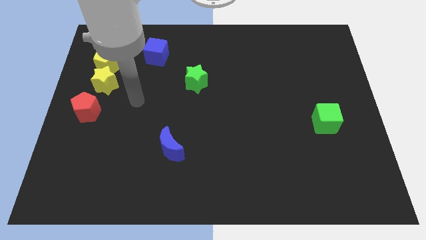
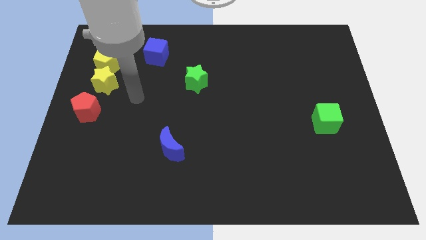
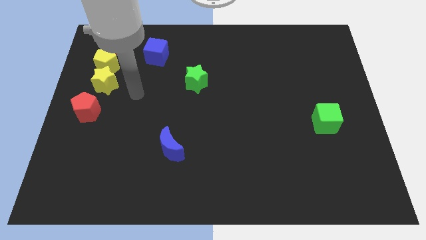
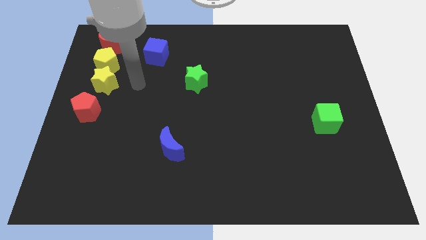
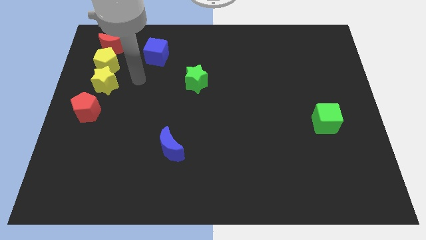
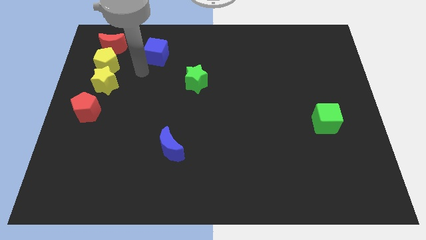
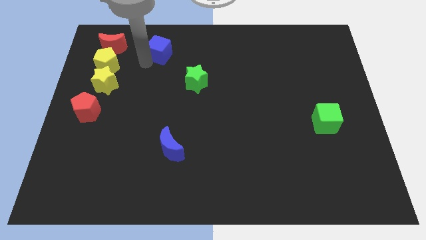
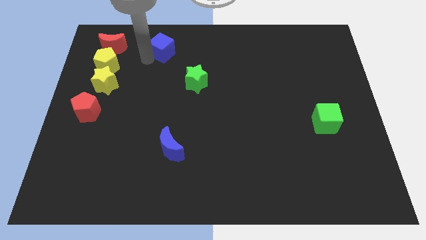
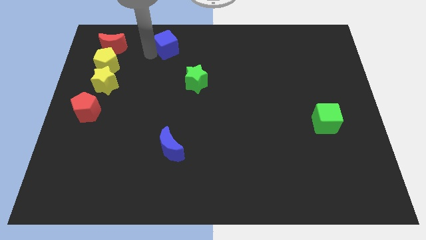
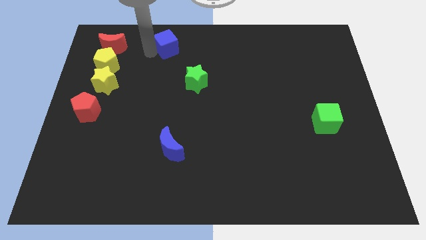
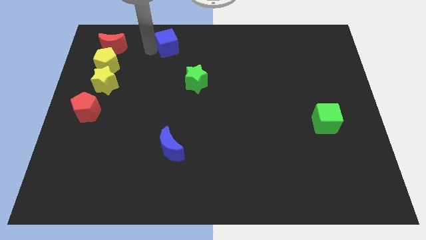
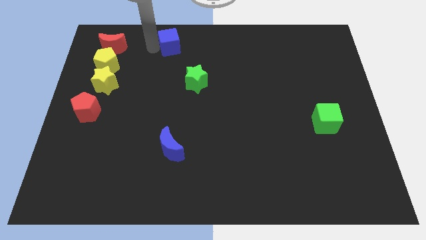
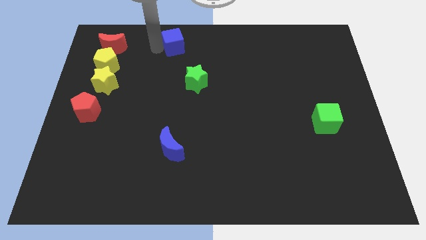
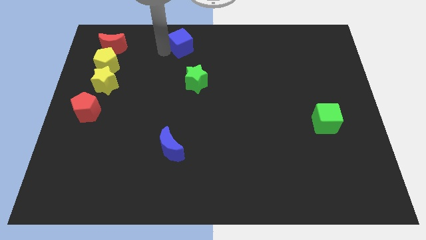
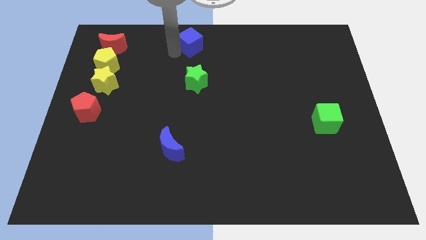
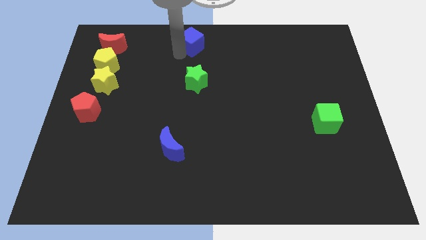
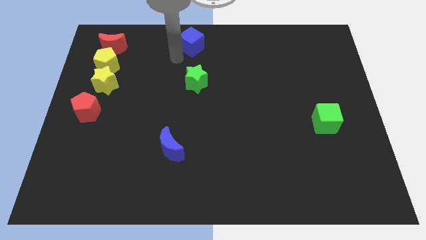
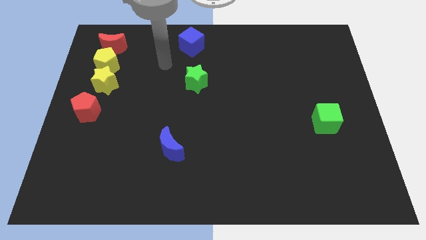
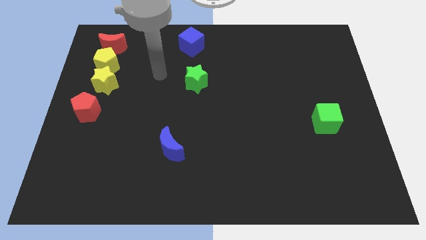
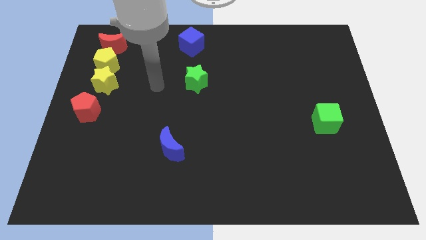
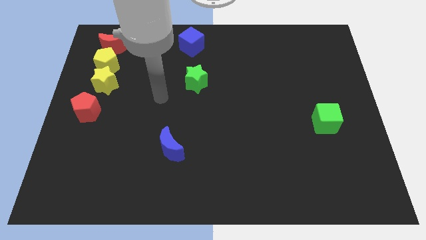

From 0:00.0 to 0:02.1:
move the blue cube towards the top center

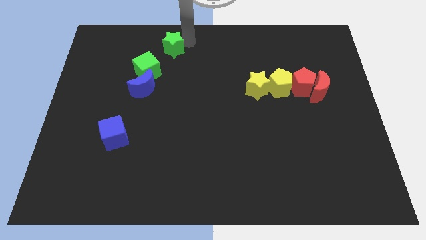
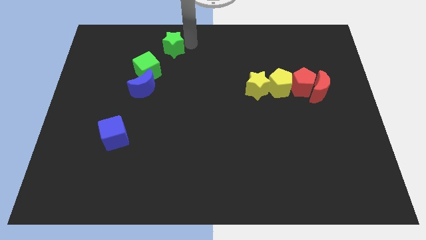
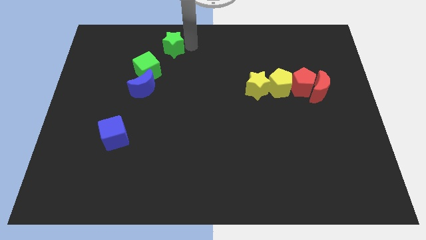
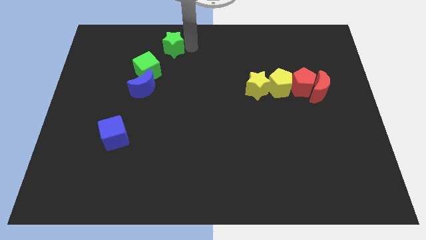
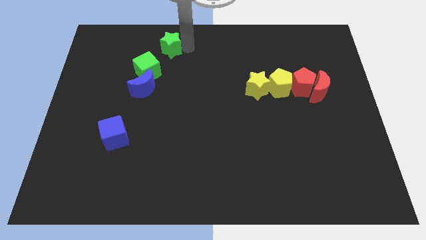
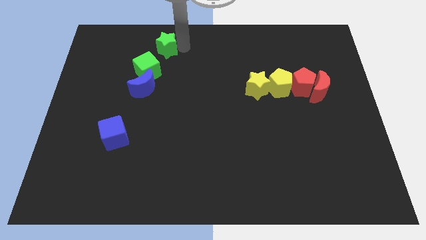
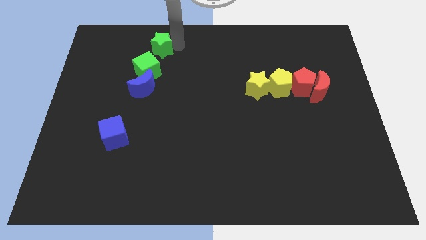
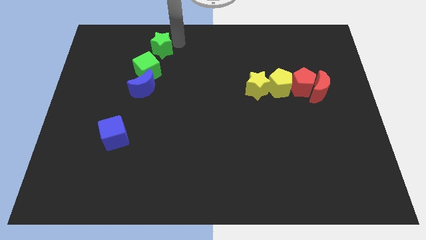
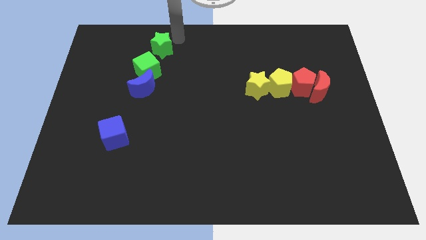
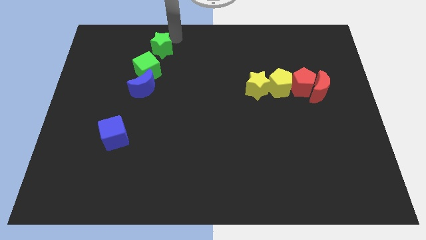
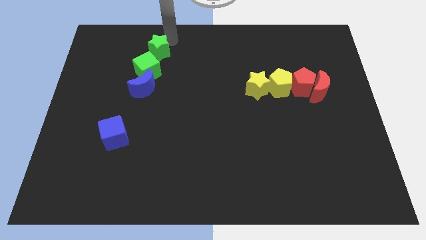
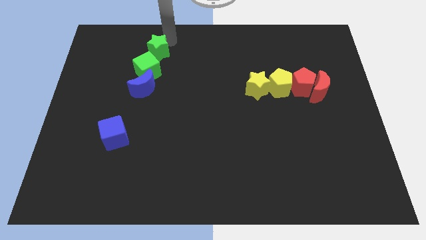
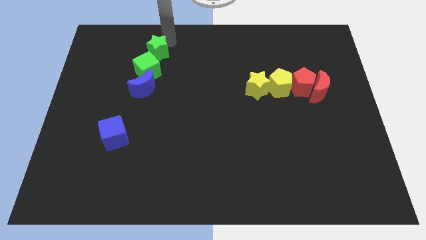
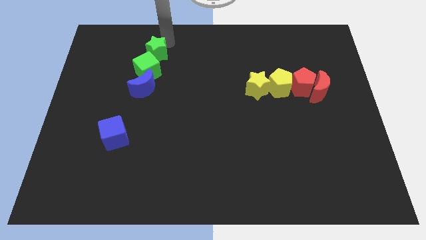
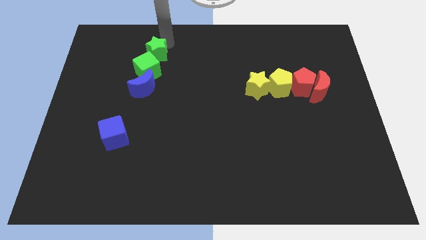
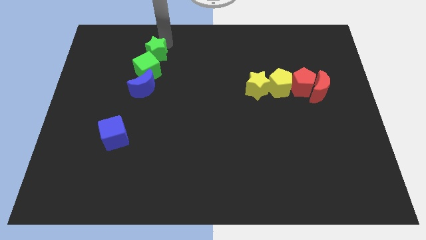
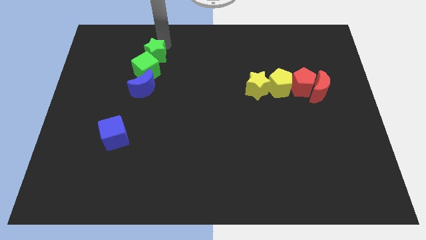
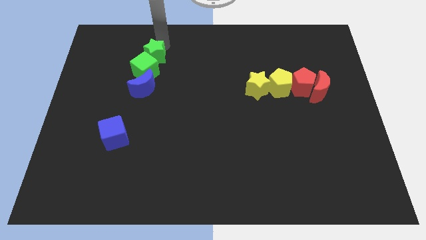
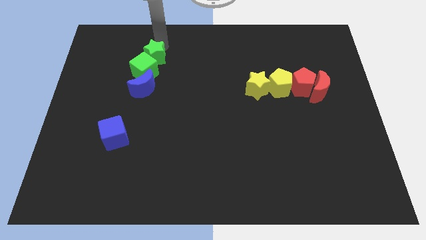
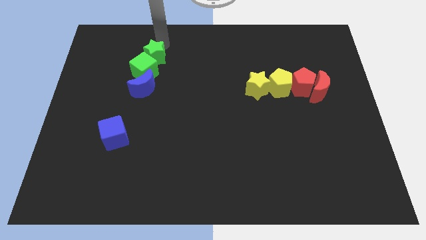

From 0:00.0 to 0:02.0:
push the green star into the green cube

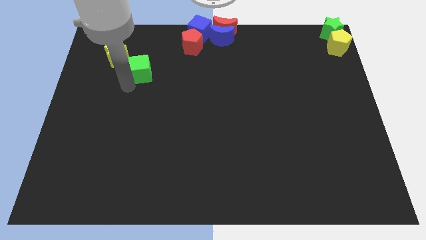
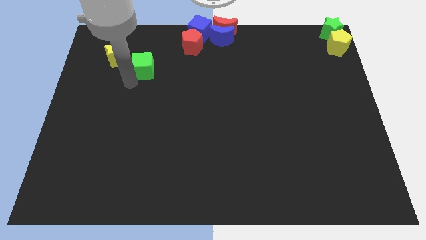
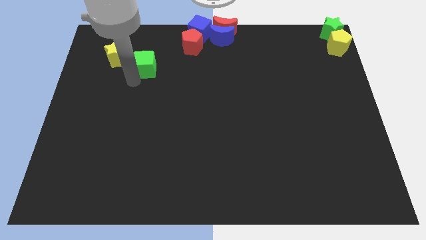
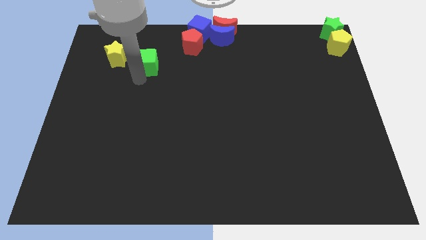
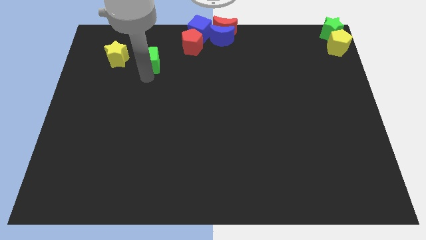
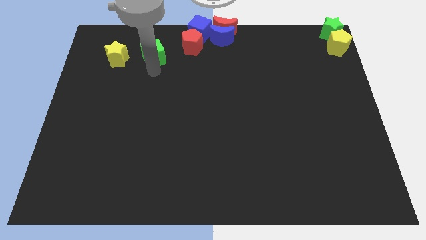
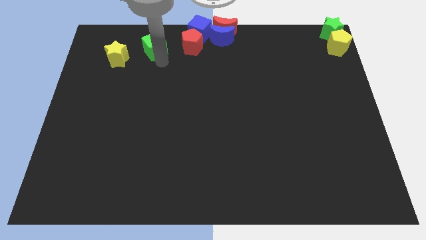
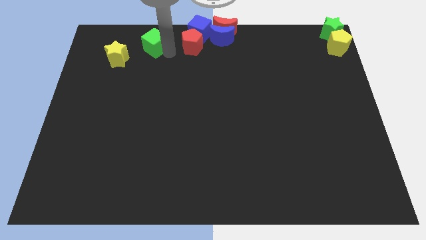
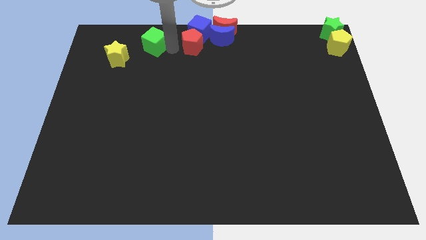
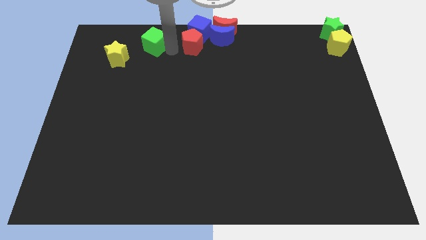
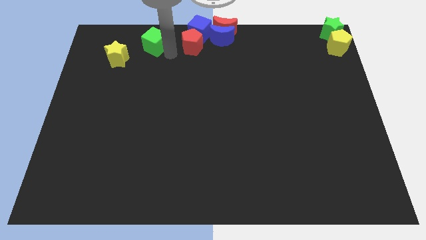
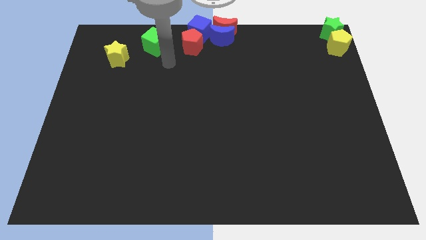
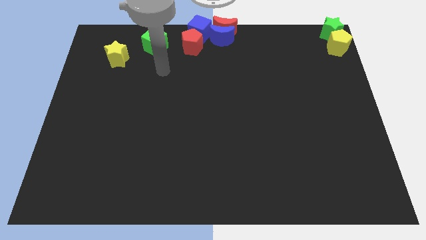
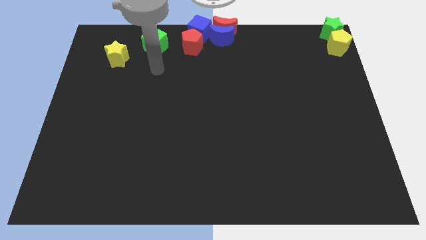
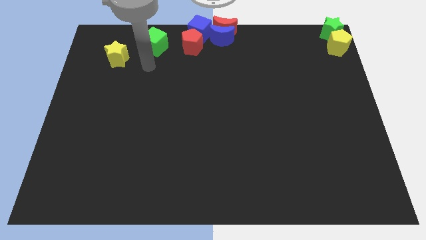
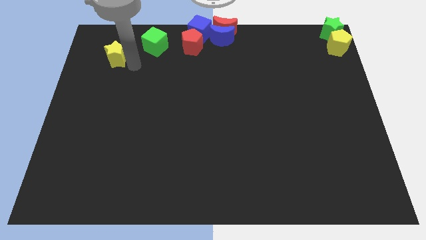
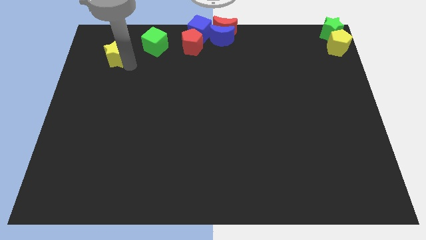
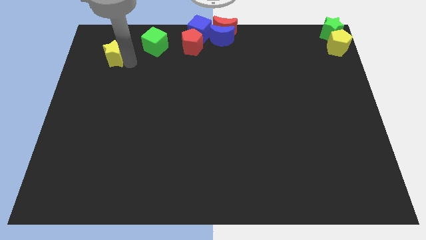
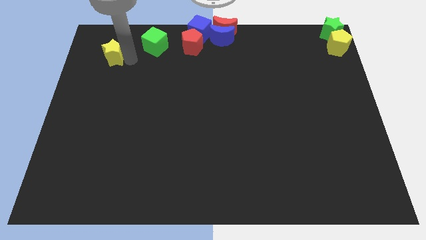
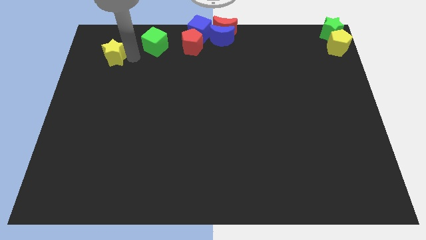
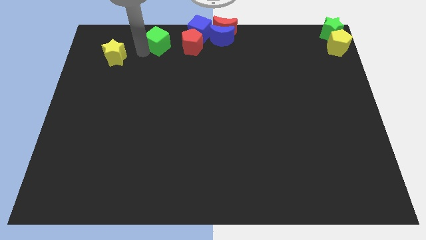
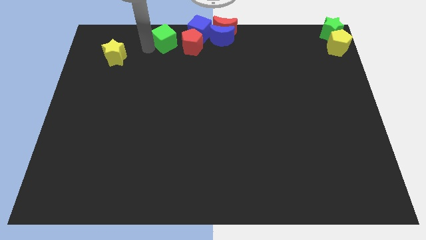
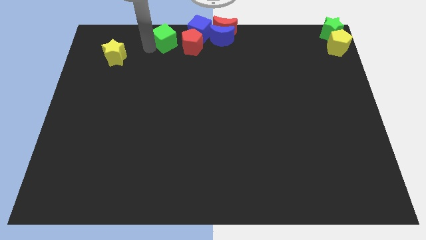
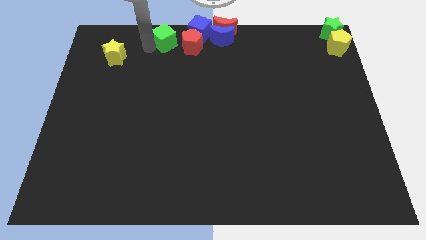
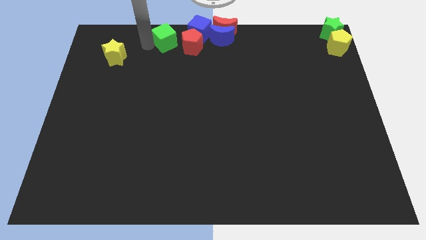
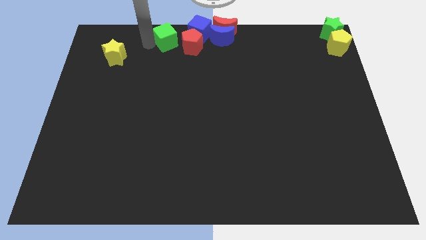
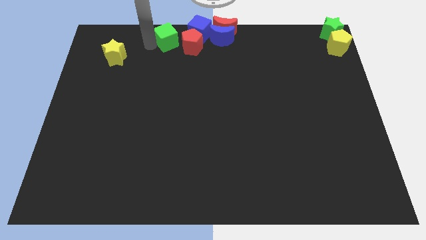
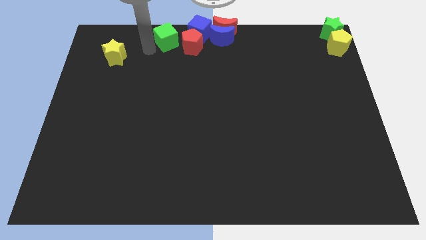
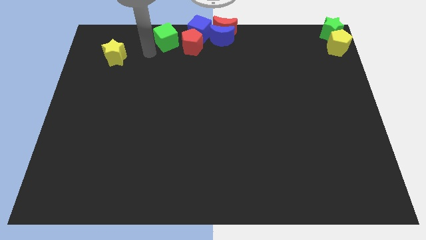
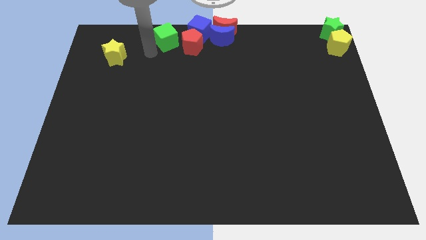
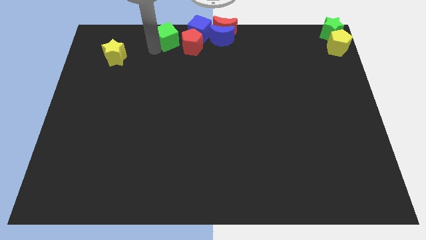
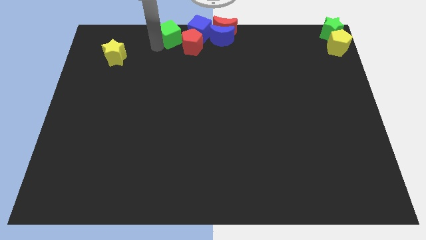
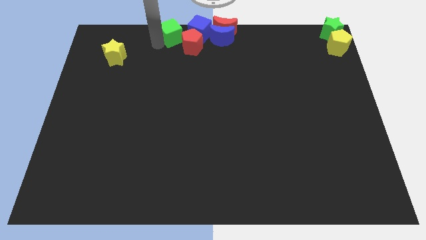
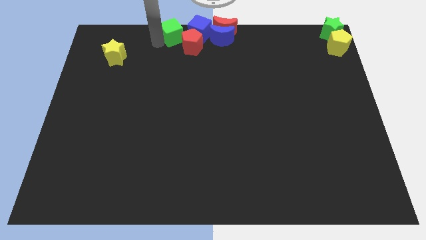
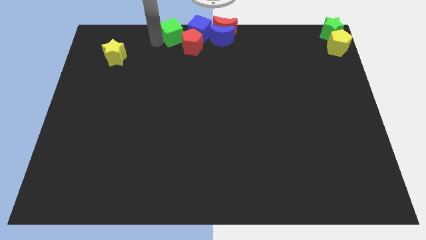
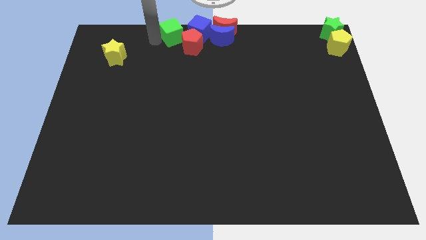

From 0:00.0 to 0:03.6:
move the green cube towards the group of blocks

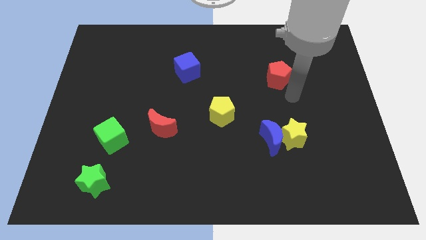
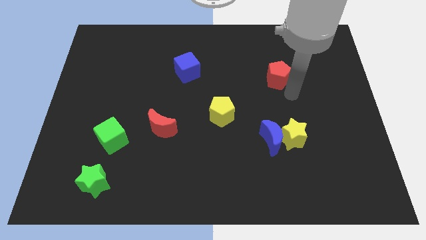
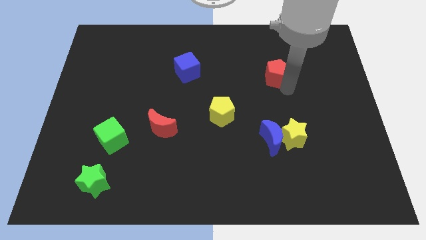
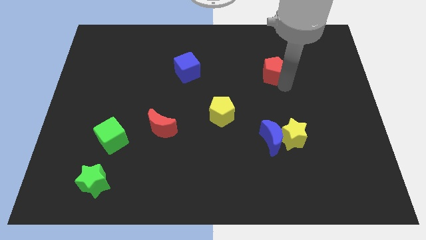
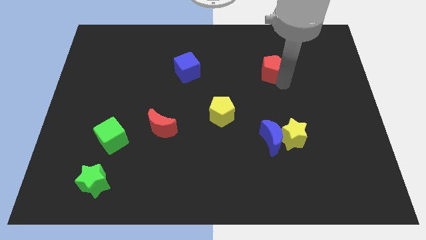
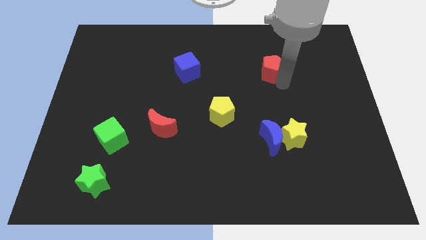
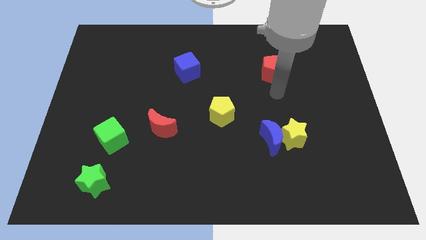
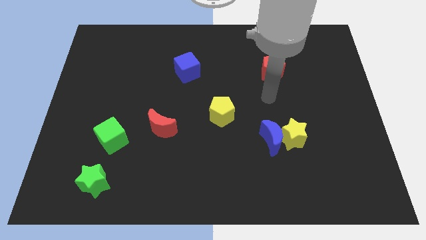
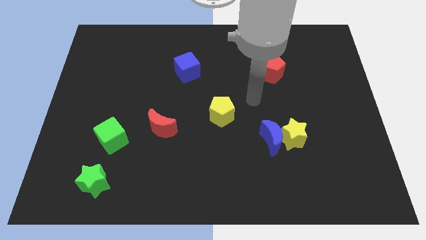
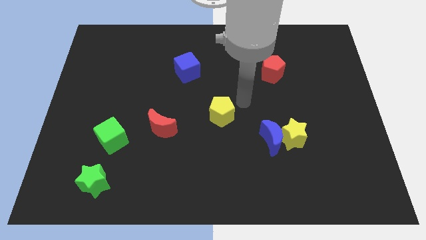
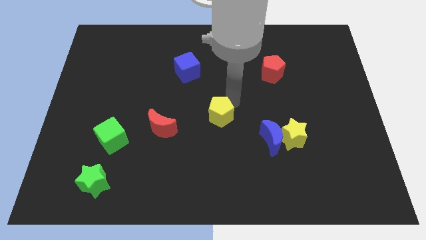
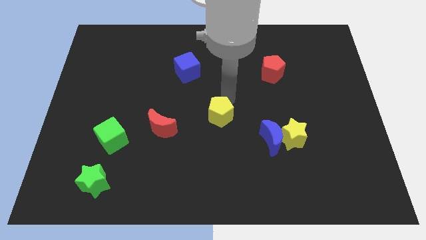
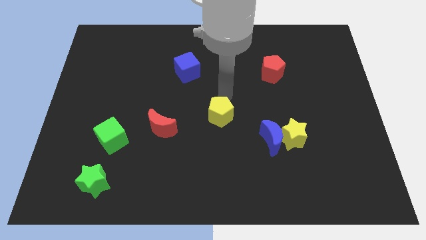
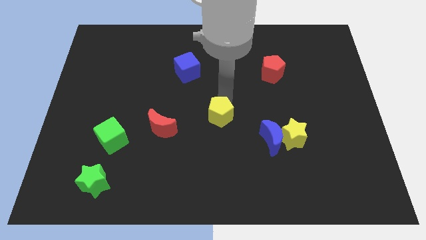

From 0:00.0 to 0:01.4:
move arm above the yellow pentagon
